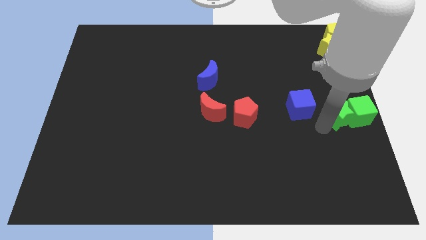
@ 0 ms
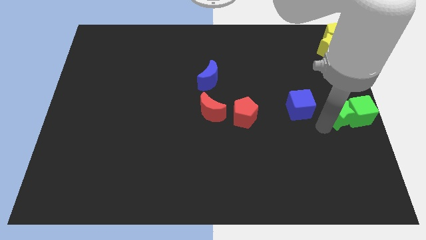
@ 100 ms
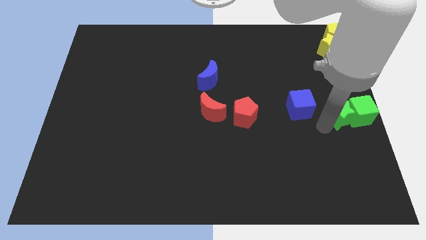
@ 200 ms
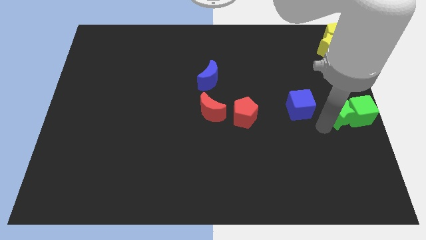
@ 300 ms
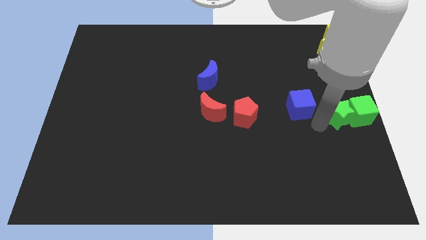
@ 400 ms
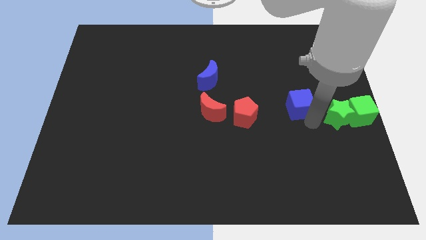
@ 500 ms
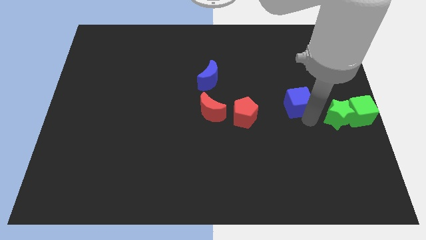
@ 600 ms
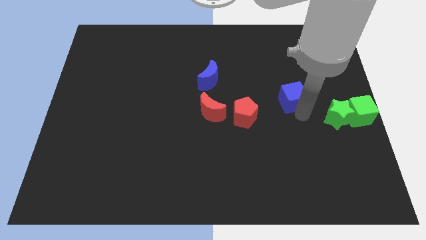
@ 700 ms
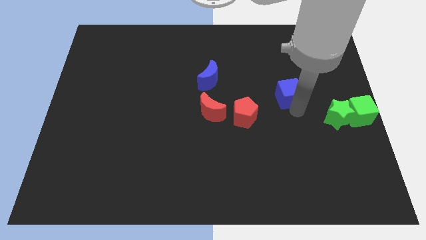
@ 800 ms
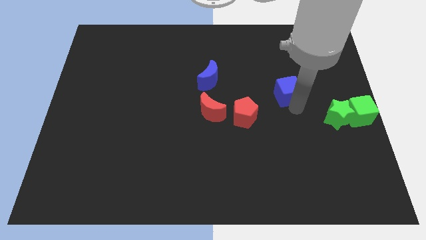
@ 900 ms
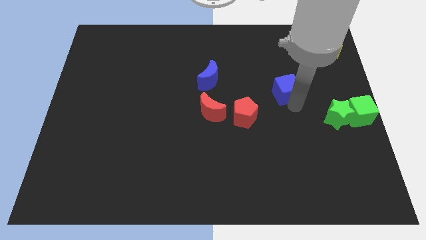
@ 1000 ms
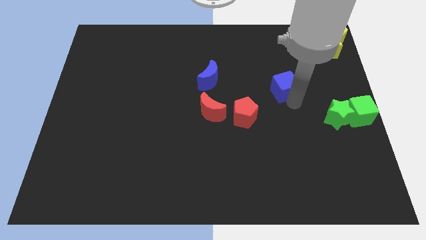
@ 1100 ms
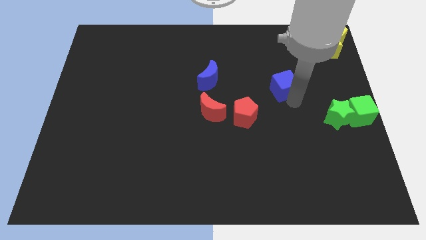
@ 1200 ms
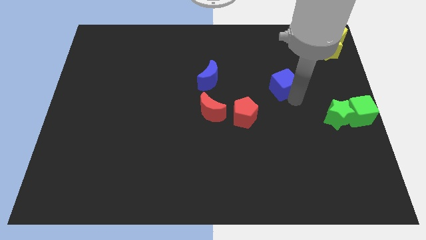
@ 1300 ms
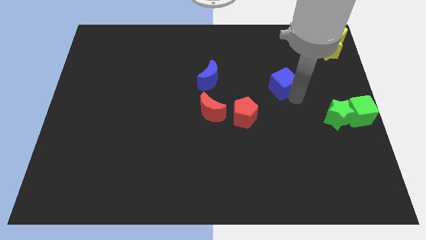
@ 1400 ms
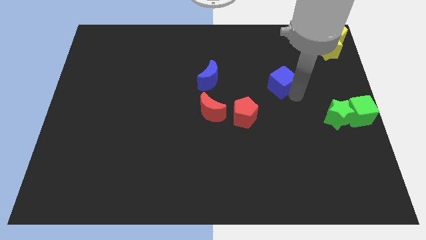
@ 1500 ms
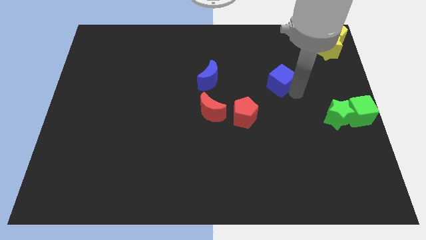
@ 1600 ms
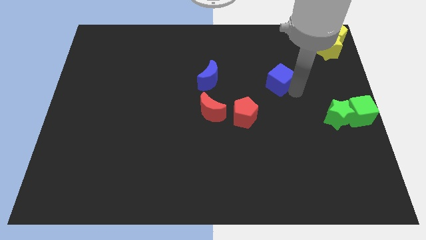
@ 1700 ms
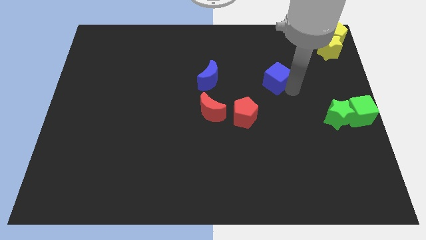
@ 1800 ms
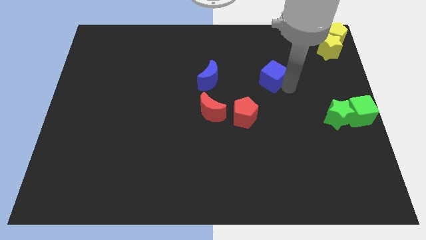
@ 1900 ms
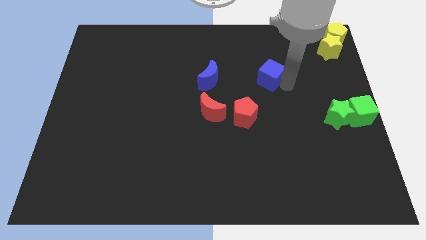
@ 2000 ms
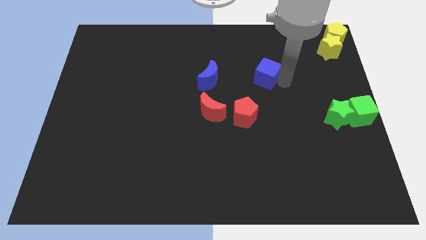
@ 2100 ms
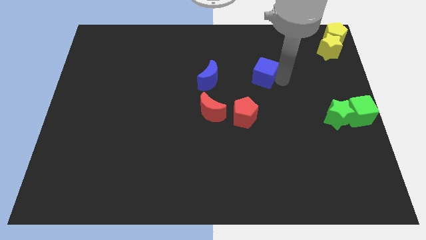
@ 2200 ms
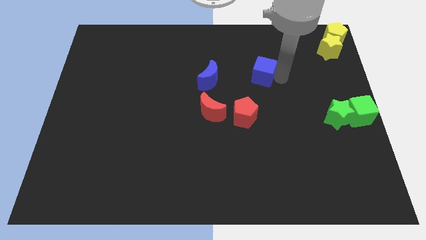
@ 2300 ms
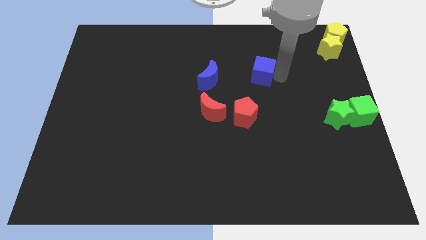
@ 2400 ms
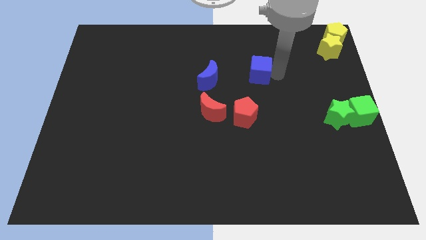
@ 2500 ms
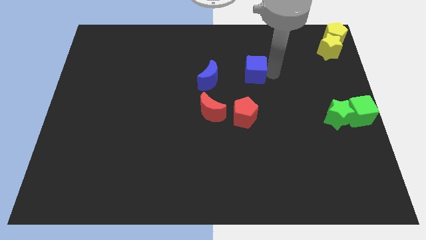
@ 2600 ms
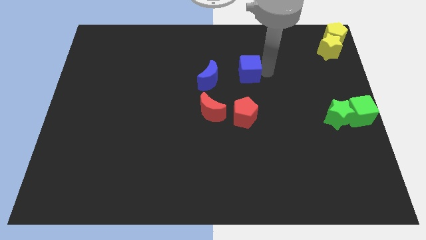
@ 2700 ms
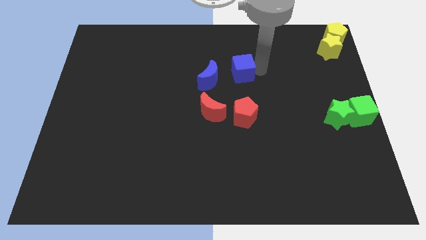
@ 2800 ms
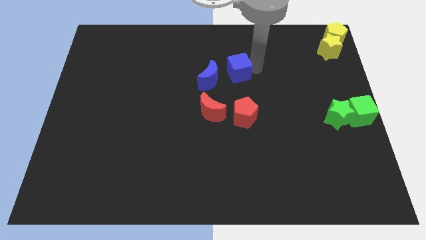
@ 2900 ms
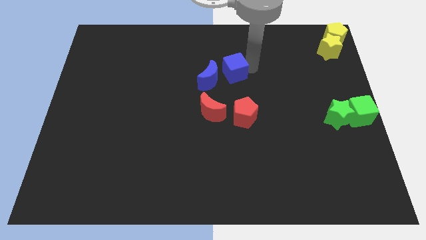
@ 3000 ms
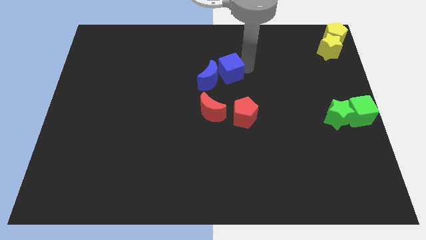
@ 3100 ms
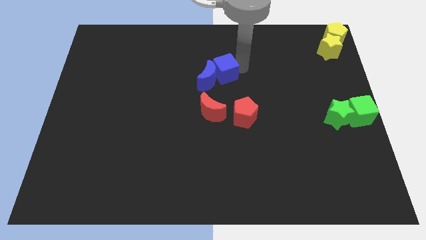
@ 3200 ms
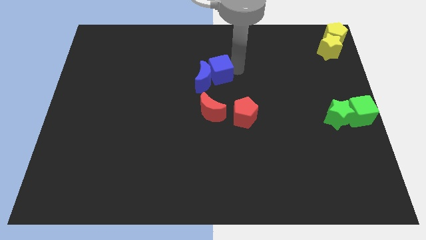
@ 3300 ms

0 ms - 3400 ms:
push the blue cube into right of blue moon

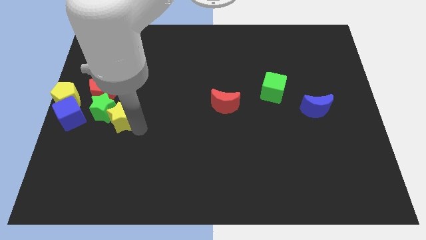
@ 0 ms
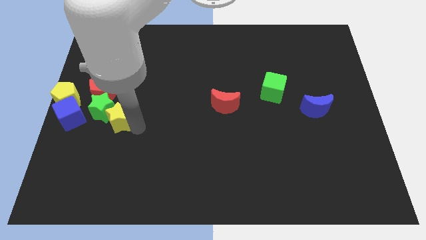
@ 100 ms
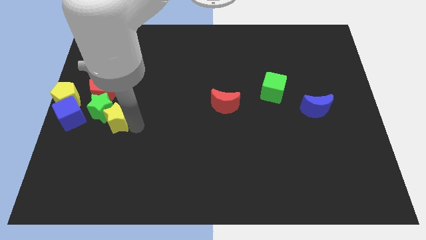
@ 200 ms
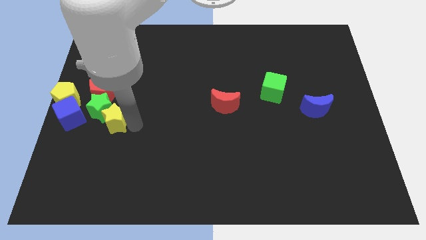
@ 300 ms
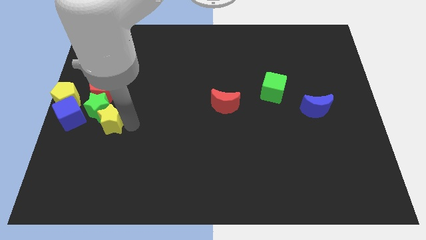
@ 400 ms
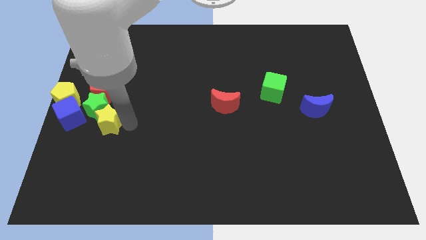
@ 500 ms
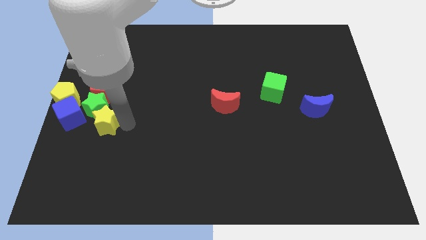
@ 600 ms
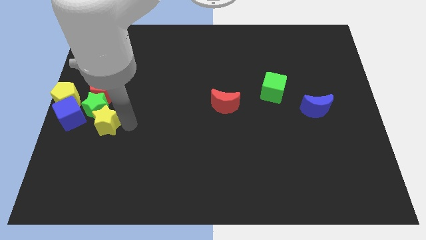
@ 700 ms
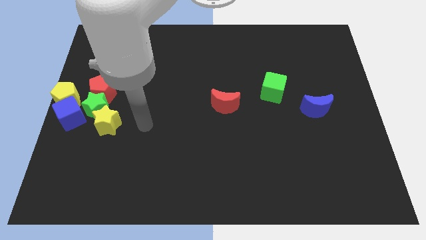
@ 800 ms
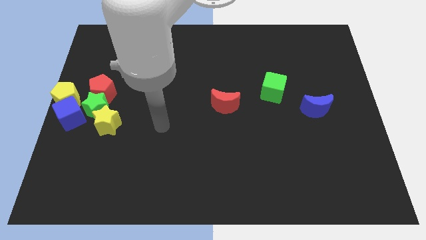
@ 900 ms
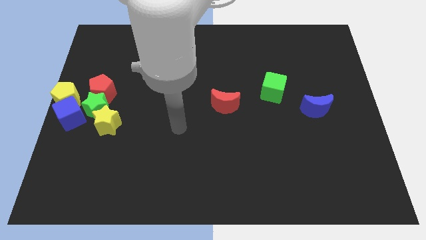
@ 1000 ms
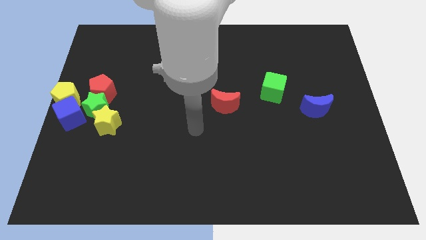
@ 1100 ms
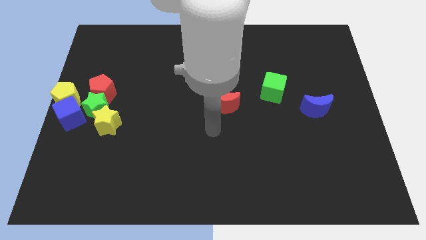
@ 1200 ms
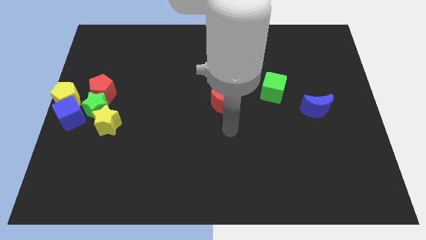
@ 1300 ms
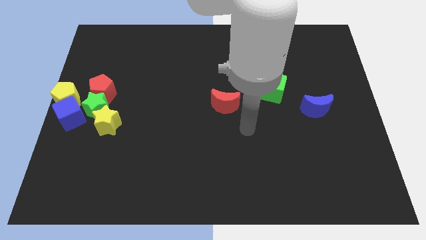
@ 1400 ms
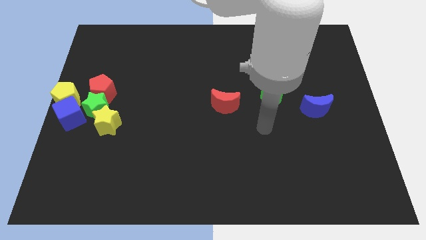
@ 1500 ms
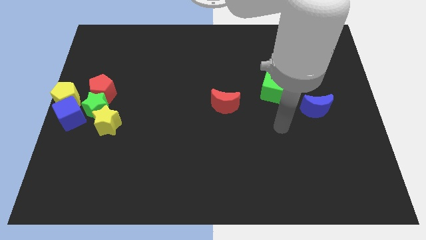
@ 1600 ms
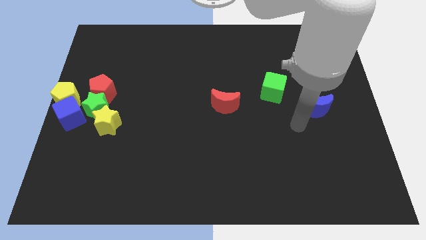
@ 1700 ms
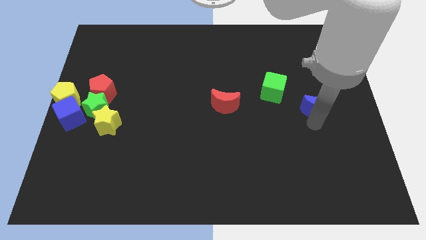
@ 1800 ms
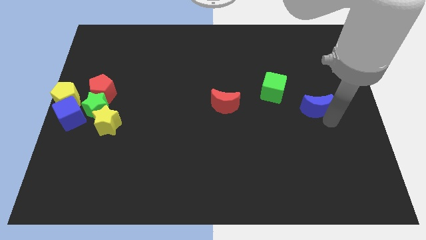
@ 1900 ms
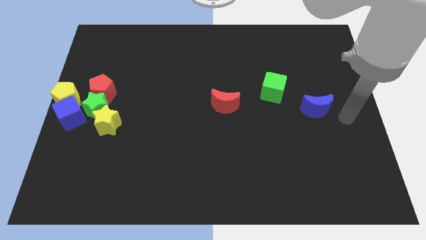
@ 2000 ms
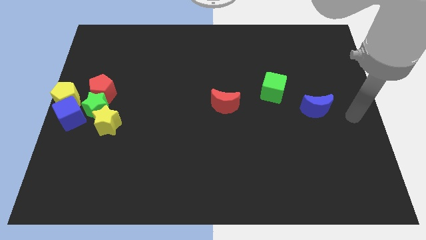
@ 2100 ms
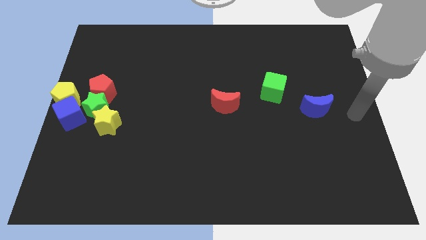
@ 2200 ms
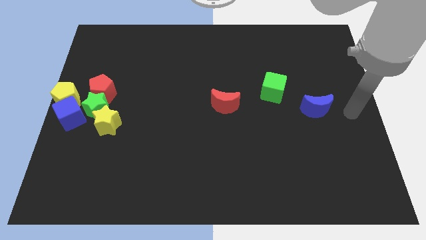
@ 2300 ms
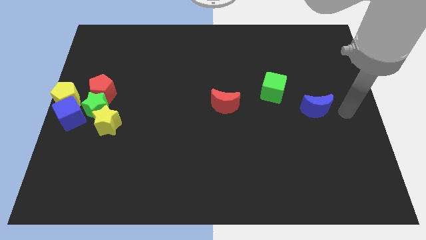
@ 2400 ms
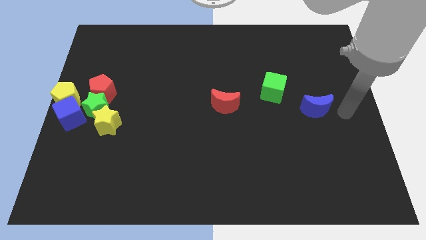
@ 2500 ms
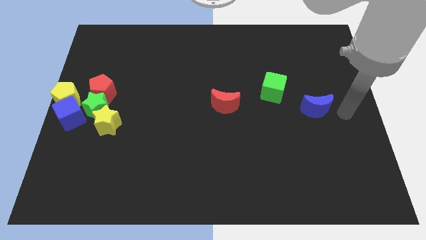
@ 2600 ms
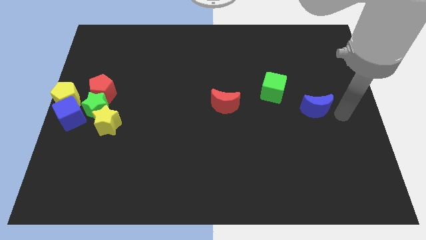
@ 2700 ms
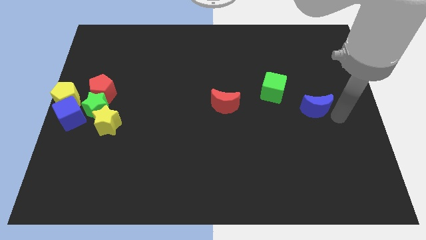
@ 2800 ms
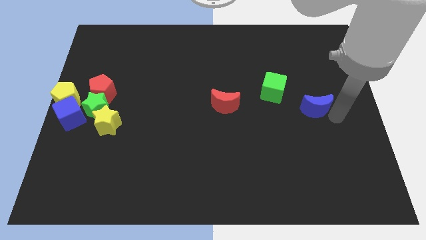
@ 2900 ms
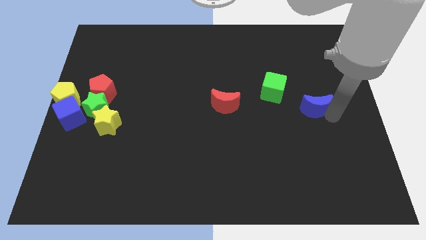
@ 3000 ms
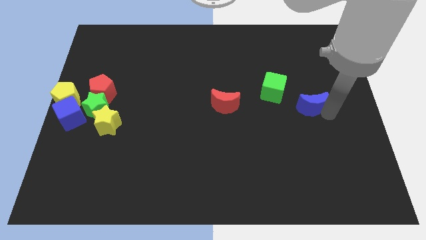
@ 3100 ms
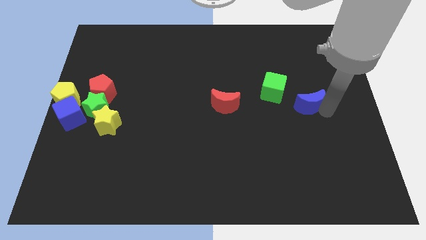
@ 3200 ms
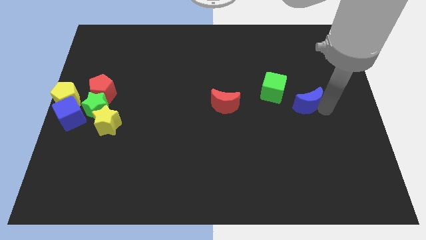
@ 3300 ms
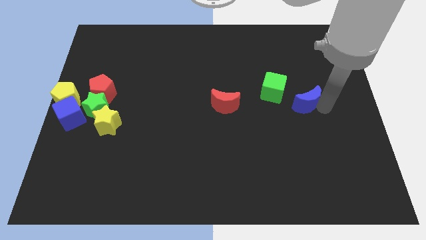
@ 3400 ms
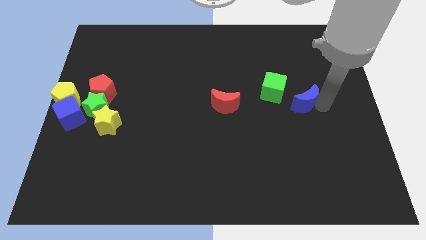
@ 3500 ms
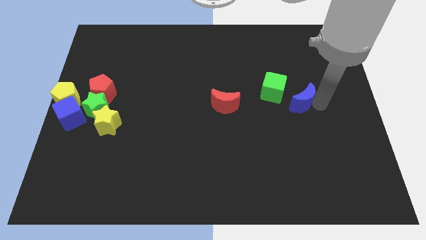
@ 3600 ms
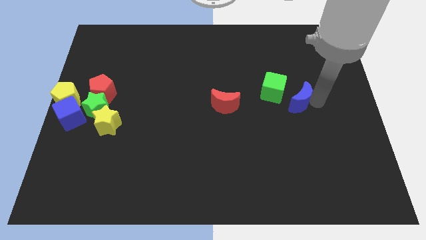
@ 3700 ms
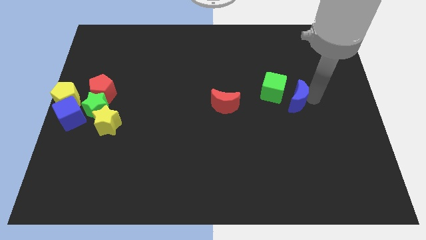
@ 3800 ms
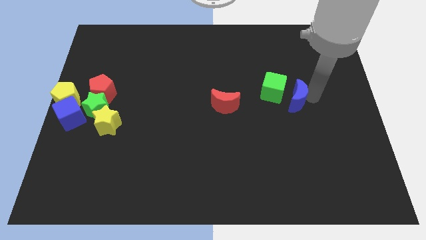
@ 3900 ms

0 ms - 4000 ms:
push blue moon to the right of green cube

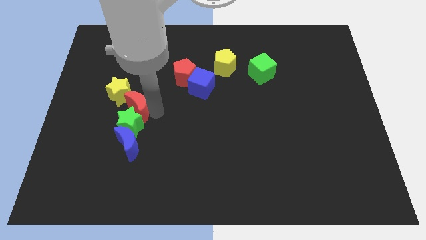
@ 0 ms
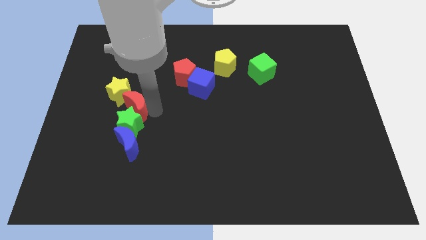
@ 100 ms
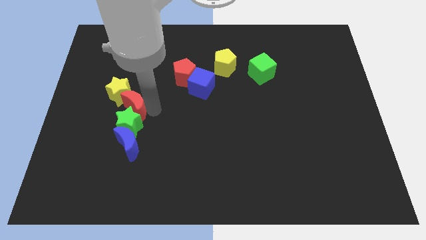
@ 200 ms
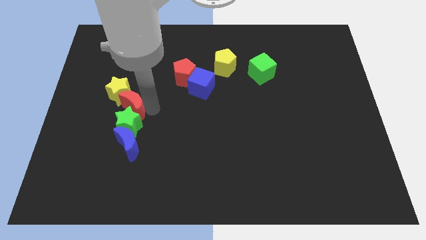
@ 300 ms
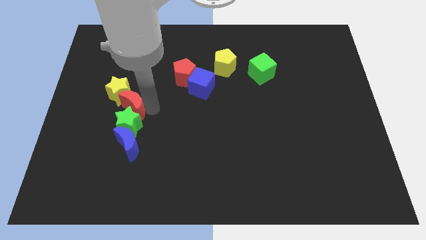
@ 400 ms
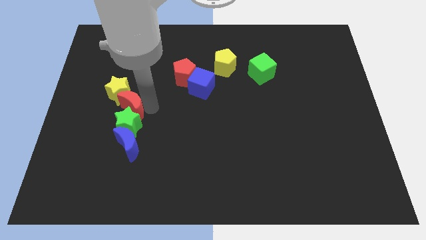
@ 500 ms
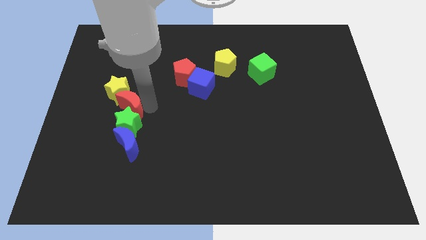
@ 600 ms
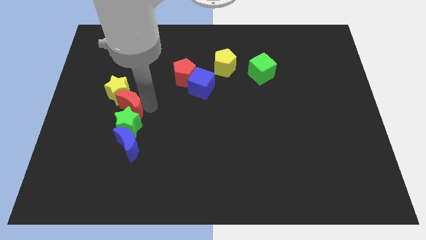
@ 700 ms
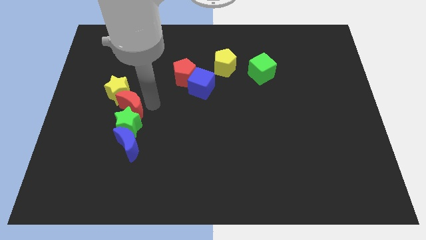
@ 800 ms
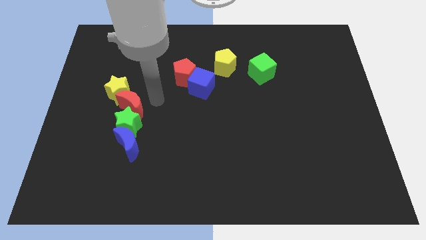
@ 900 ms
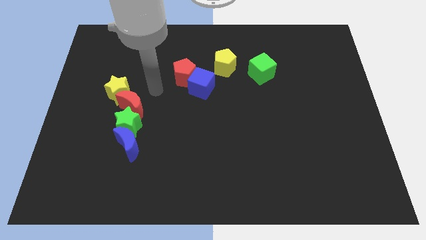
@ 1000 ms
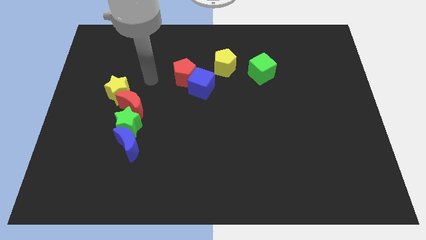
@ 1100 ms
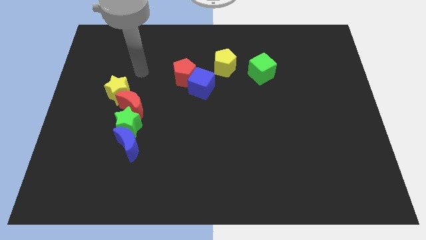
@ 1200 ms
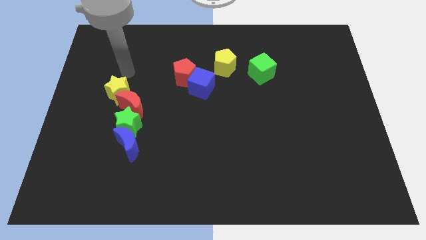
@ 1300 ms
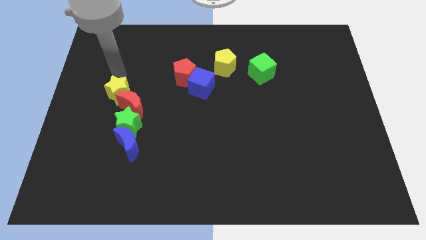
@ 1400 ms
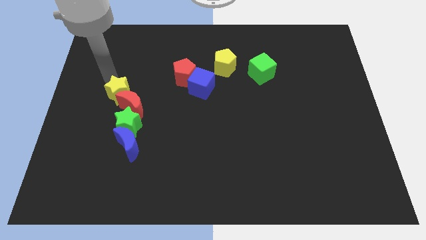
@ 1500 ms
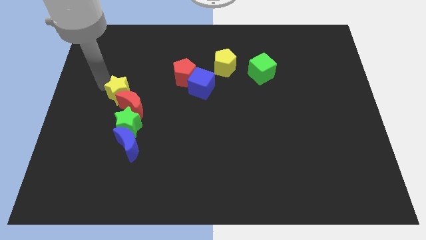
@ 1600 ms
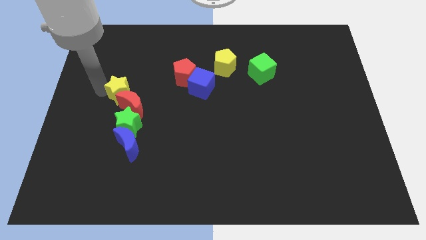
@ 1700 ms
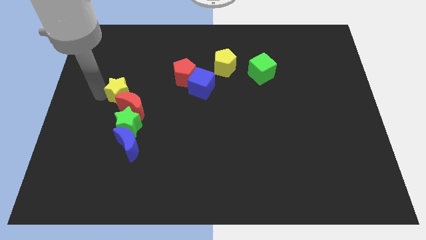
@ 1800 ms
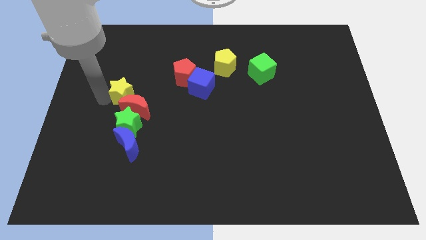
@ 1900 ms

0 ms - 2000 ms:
move the red moon slightly
